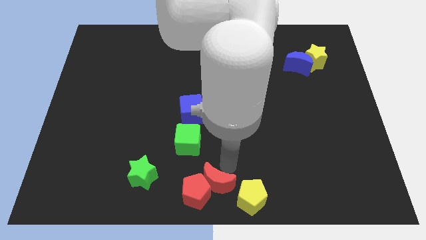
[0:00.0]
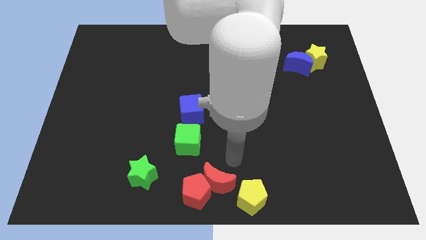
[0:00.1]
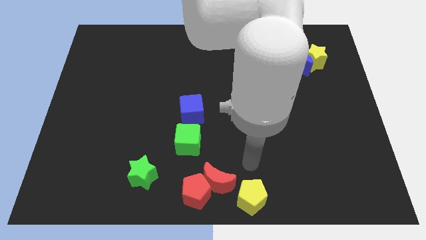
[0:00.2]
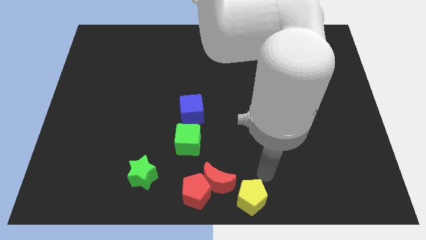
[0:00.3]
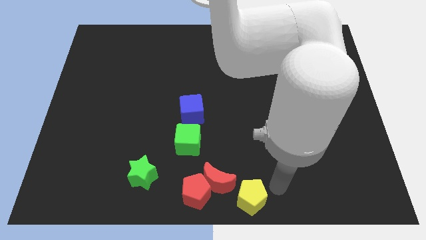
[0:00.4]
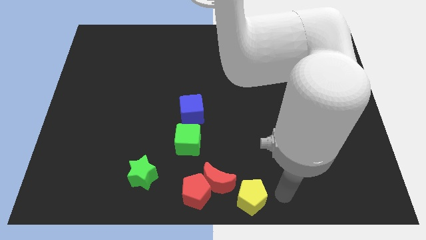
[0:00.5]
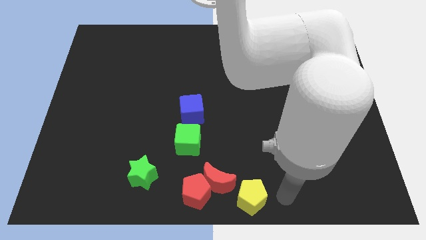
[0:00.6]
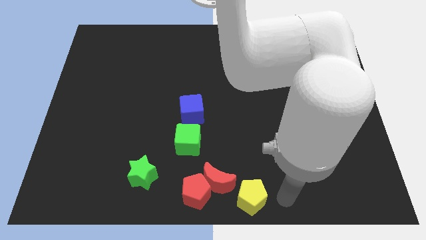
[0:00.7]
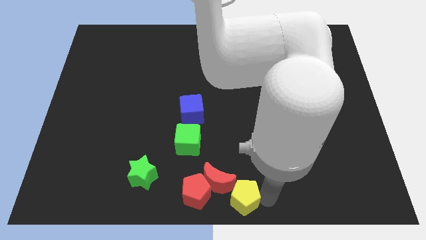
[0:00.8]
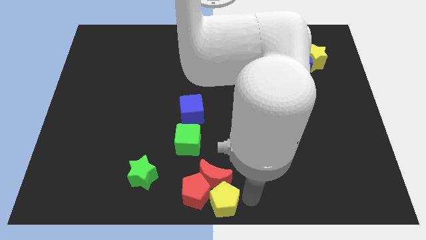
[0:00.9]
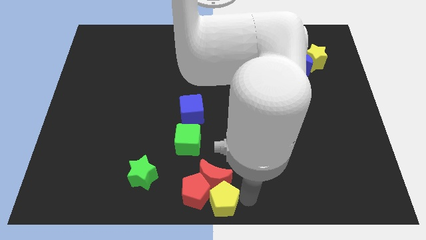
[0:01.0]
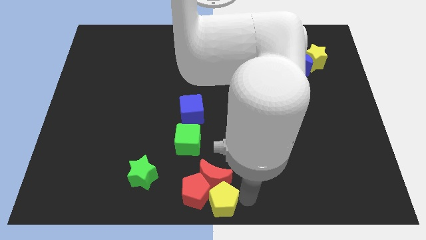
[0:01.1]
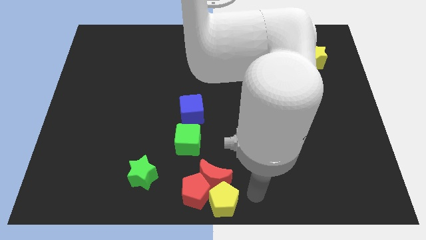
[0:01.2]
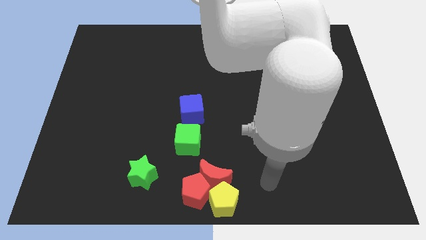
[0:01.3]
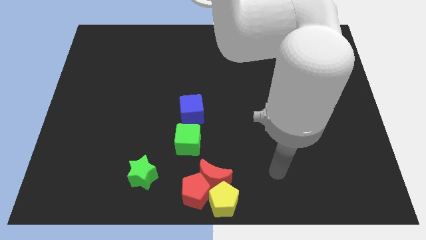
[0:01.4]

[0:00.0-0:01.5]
push the yellow pentagon towards the red pentagon

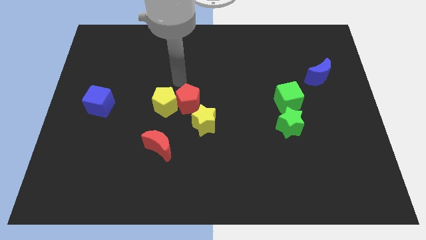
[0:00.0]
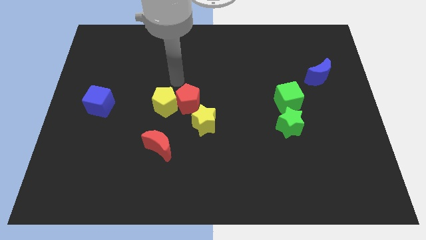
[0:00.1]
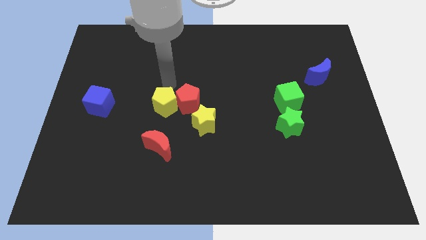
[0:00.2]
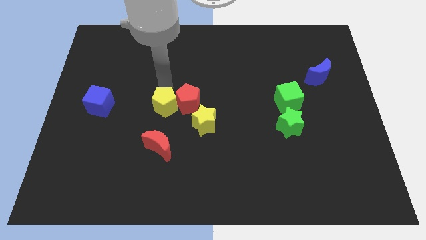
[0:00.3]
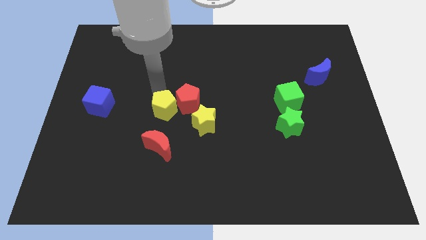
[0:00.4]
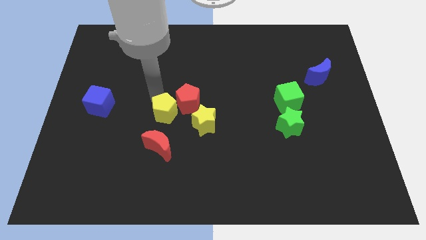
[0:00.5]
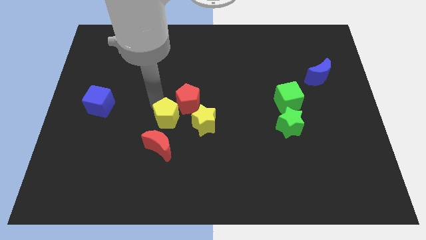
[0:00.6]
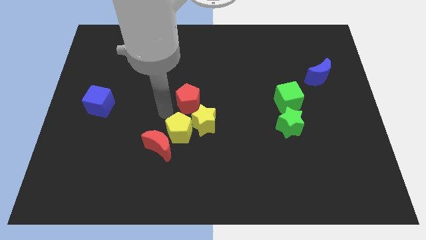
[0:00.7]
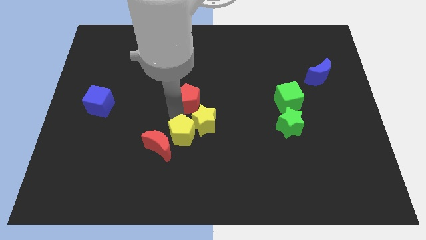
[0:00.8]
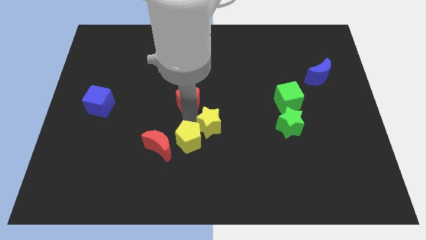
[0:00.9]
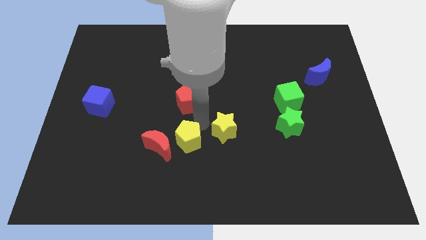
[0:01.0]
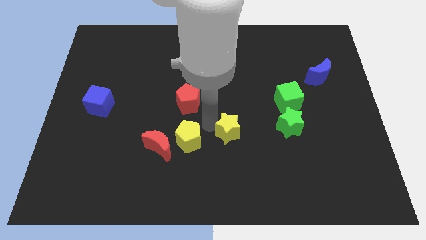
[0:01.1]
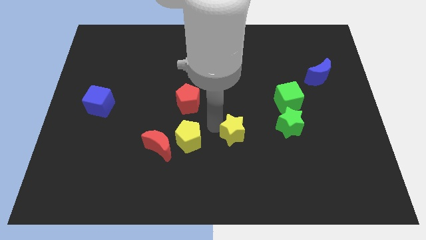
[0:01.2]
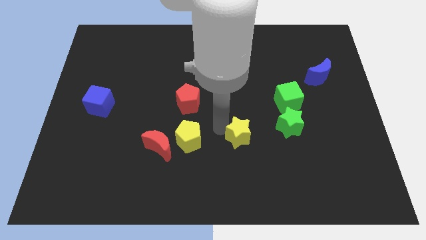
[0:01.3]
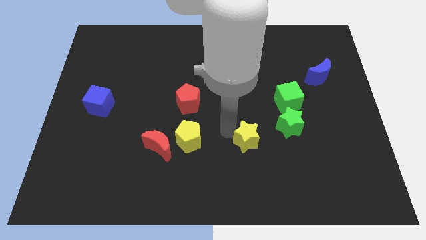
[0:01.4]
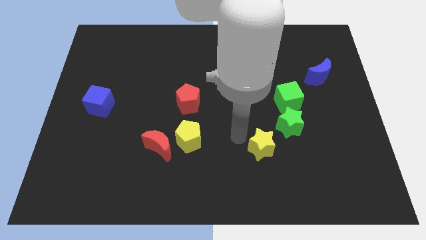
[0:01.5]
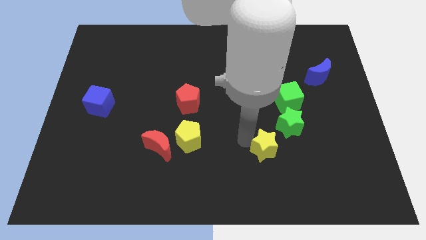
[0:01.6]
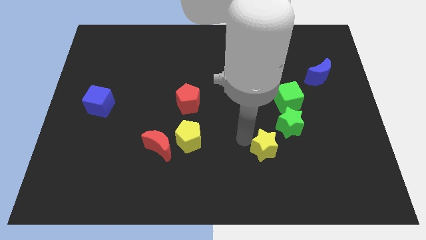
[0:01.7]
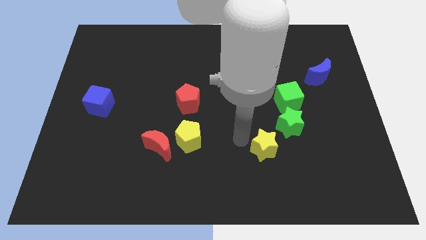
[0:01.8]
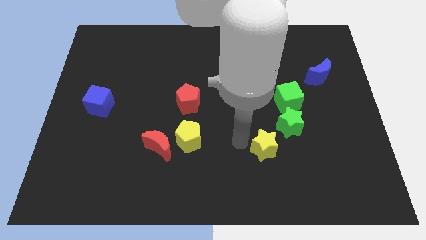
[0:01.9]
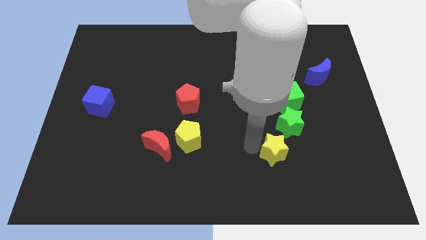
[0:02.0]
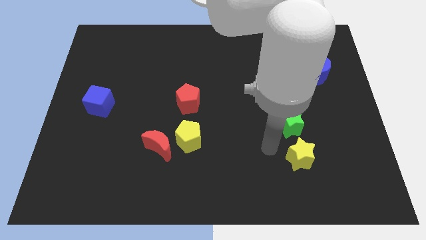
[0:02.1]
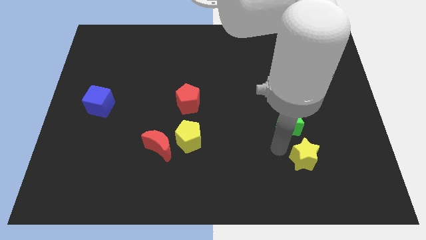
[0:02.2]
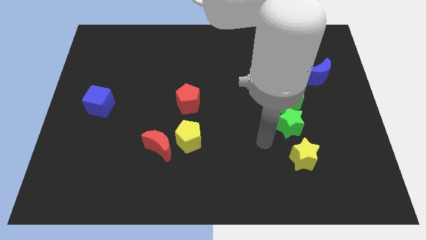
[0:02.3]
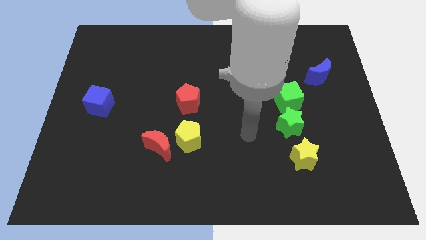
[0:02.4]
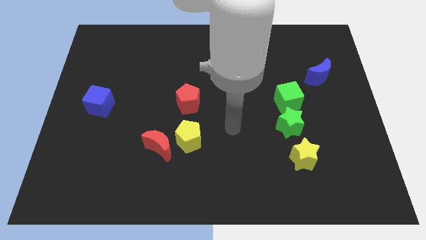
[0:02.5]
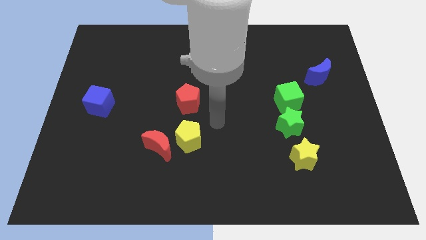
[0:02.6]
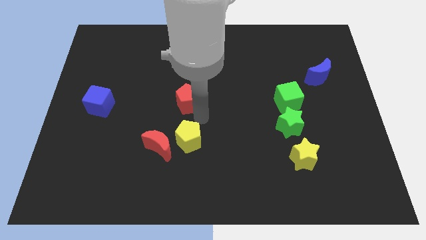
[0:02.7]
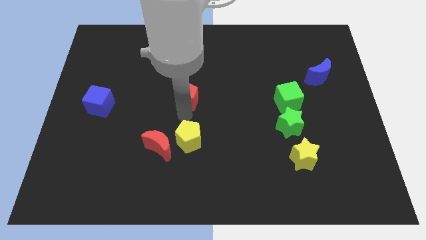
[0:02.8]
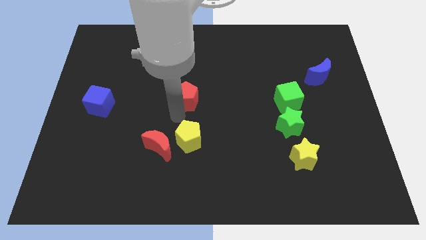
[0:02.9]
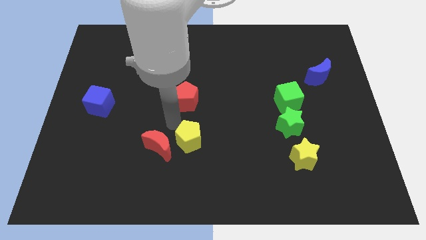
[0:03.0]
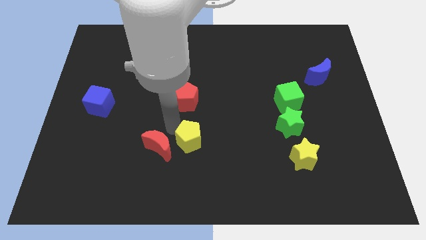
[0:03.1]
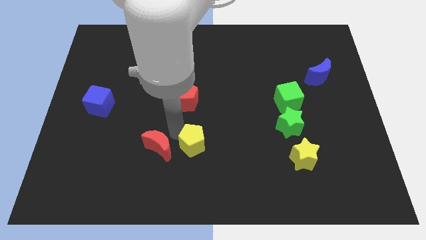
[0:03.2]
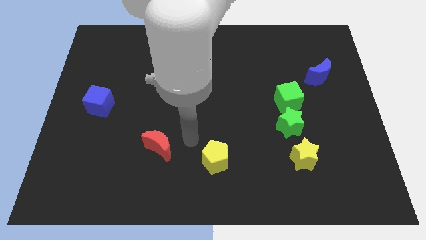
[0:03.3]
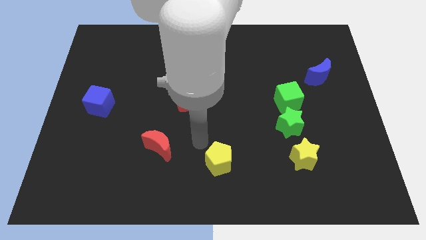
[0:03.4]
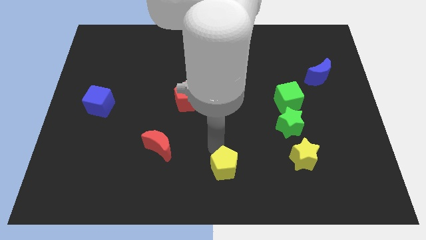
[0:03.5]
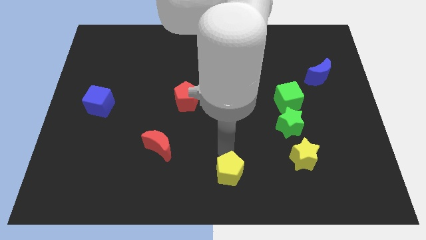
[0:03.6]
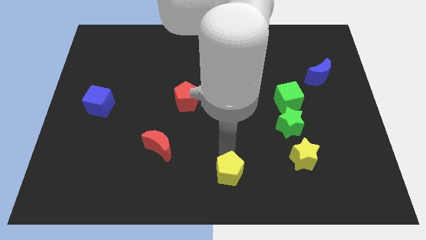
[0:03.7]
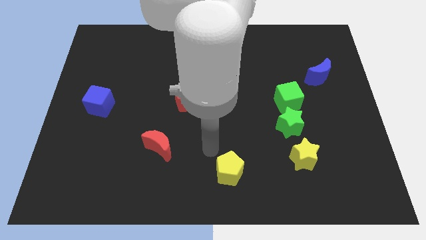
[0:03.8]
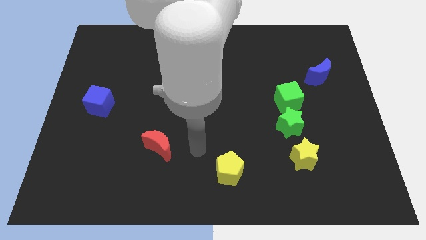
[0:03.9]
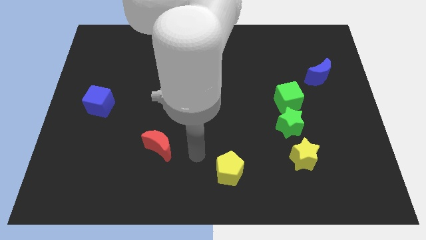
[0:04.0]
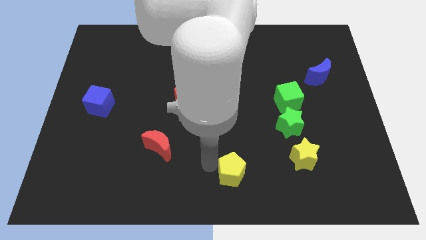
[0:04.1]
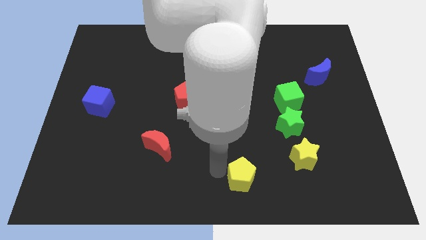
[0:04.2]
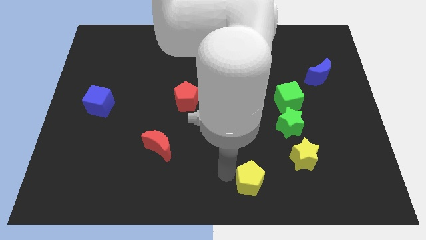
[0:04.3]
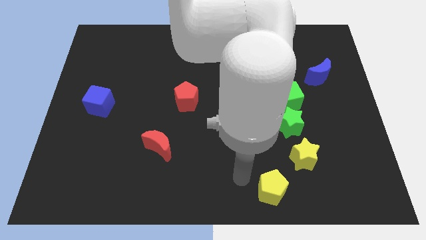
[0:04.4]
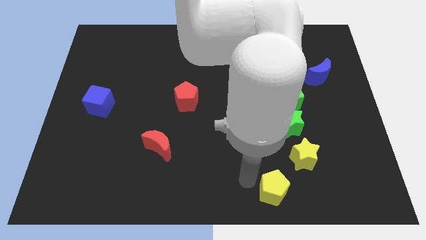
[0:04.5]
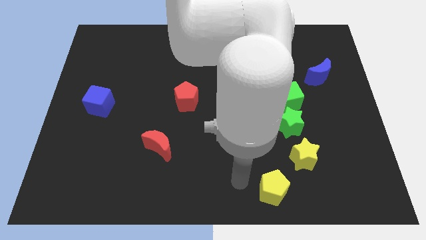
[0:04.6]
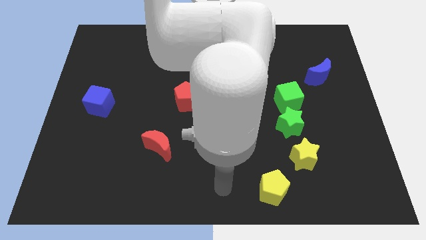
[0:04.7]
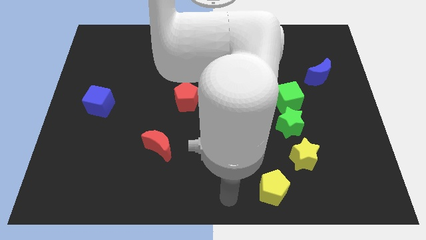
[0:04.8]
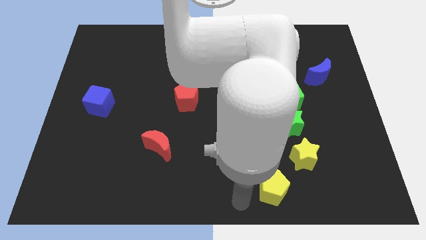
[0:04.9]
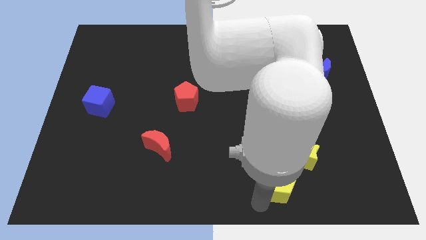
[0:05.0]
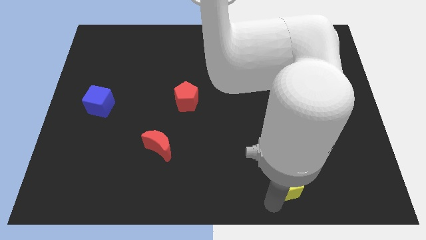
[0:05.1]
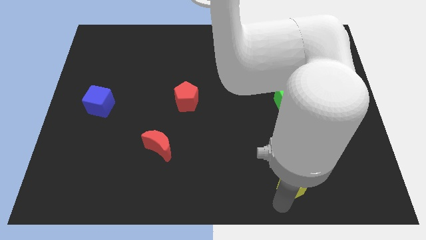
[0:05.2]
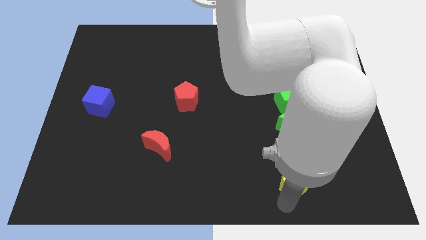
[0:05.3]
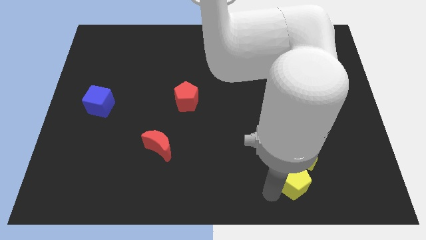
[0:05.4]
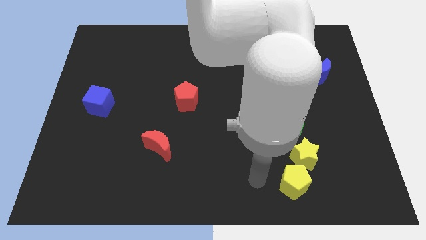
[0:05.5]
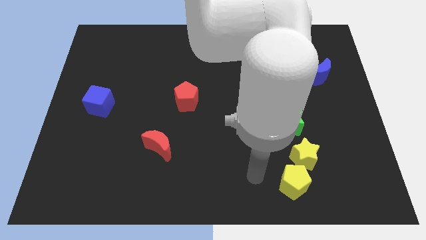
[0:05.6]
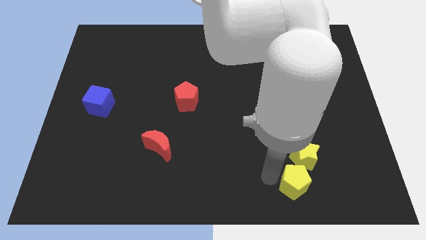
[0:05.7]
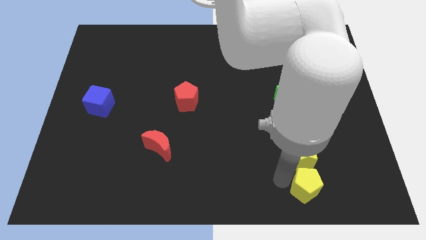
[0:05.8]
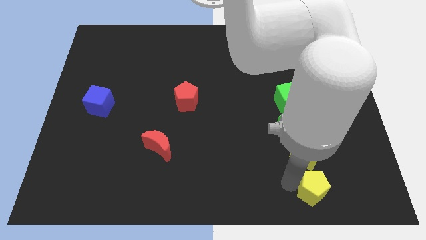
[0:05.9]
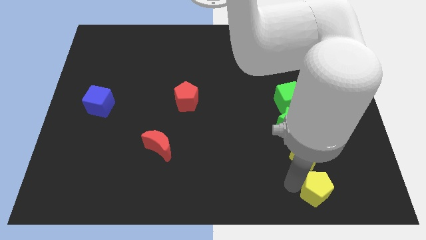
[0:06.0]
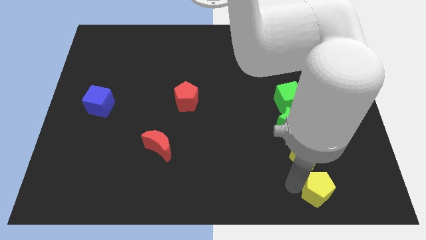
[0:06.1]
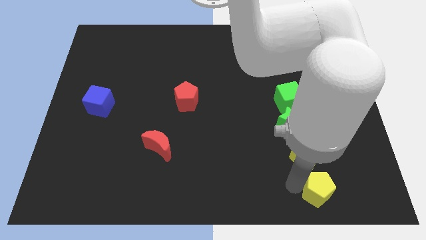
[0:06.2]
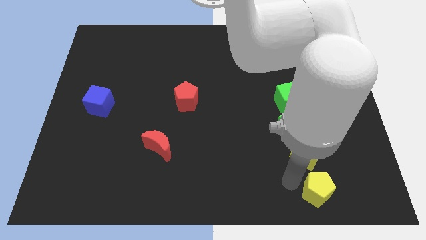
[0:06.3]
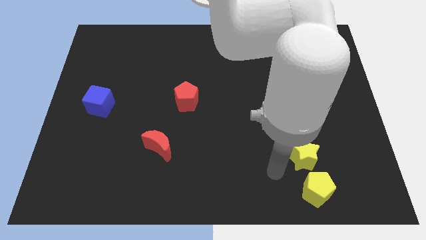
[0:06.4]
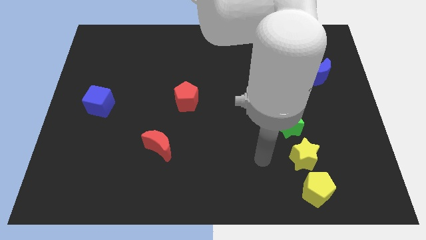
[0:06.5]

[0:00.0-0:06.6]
form a vertical line using yellow and green blocks

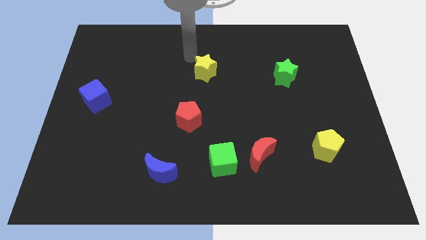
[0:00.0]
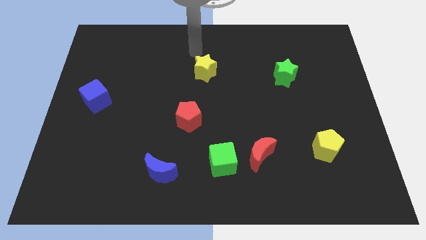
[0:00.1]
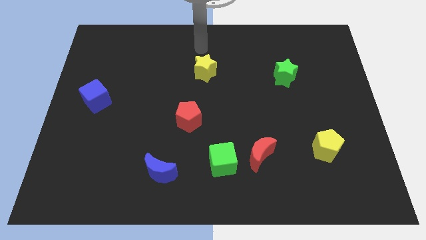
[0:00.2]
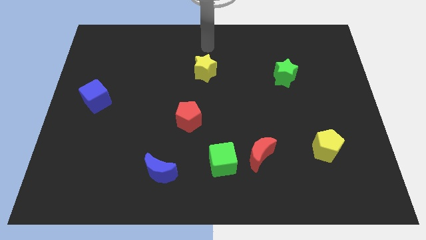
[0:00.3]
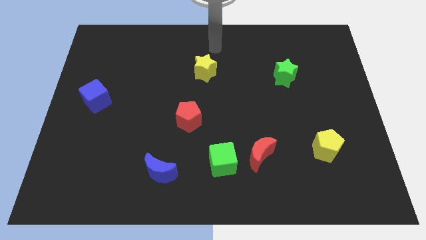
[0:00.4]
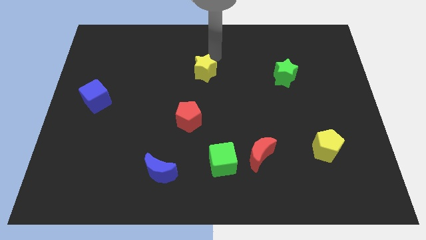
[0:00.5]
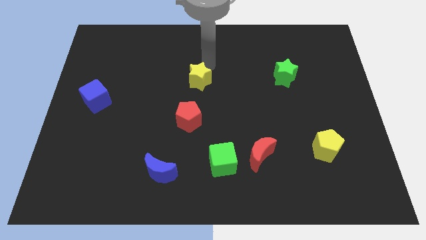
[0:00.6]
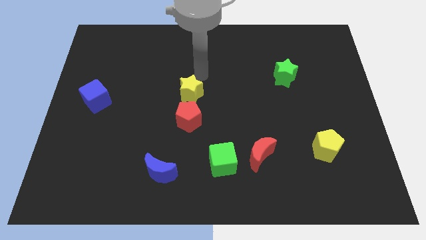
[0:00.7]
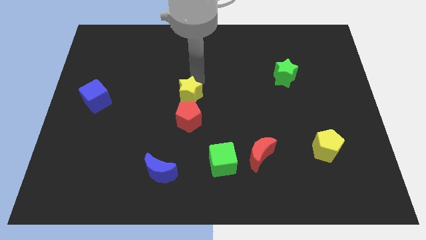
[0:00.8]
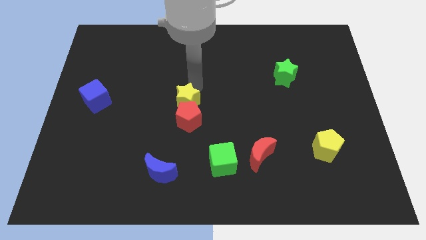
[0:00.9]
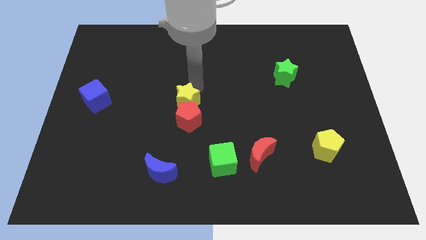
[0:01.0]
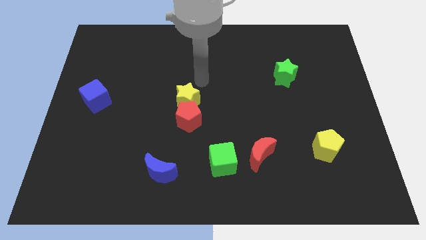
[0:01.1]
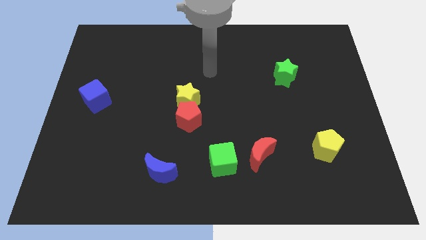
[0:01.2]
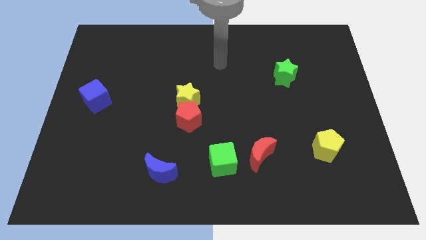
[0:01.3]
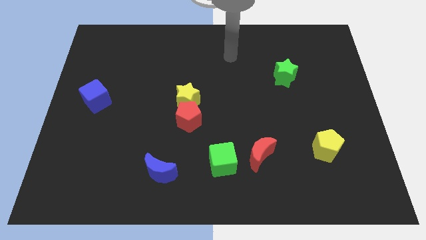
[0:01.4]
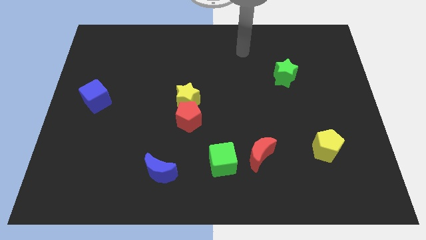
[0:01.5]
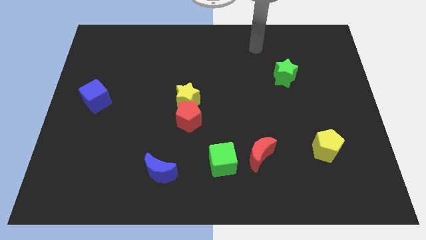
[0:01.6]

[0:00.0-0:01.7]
push the yellow star to the top of the red pentagon
